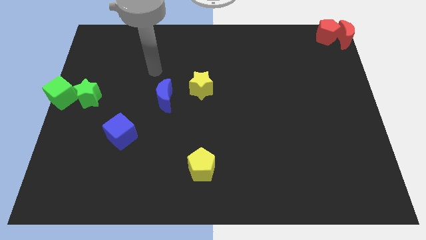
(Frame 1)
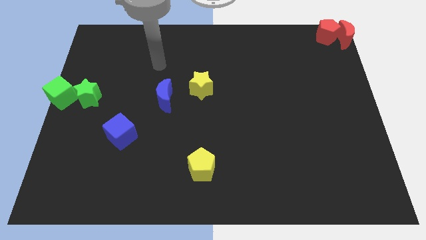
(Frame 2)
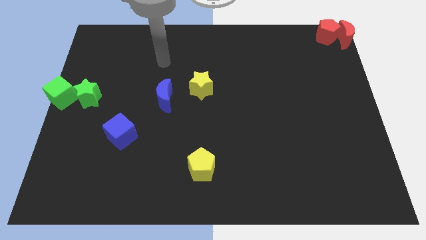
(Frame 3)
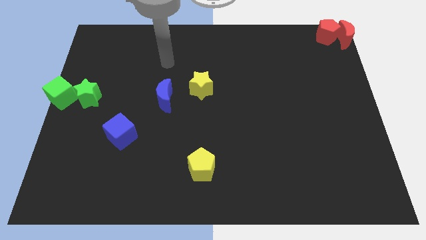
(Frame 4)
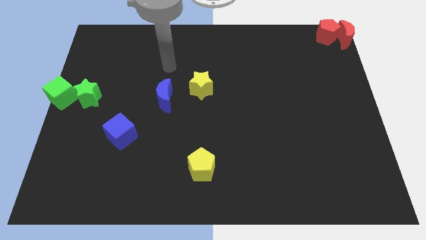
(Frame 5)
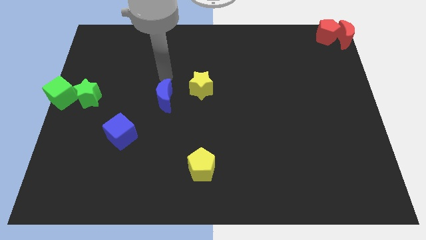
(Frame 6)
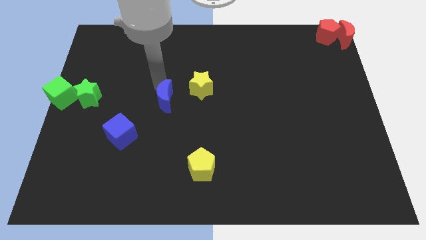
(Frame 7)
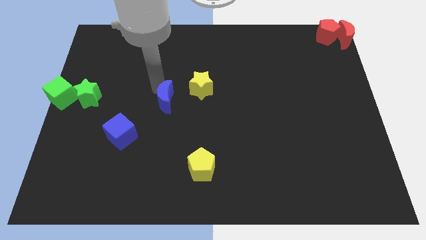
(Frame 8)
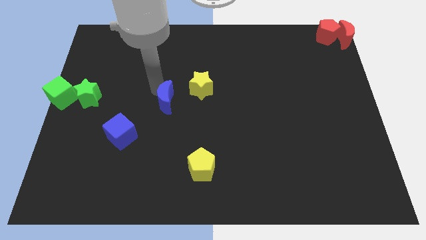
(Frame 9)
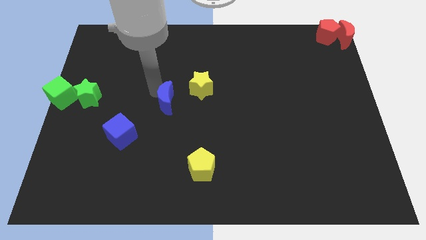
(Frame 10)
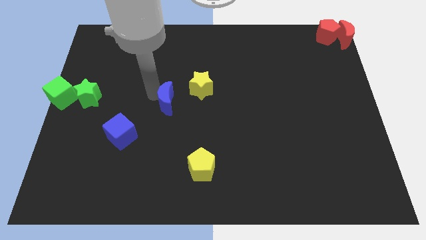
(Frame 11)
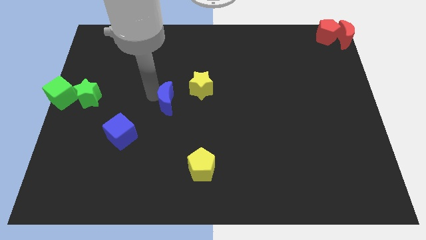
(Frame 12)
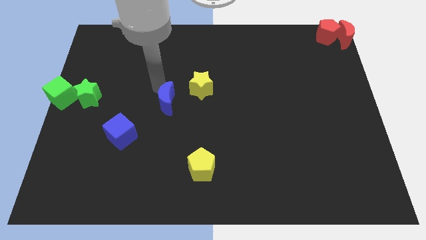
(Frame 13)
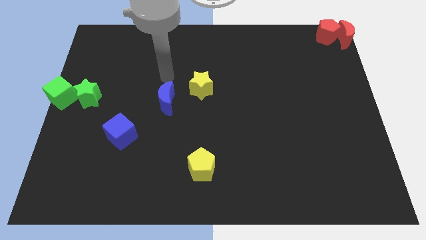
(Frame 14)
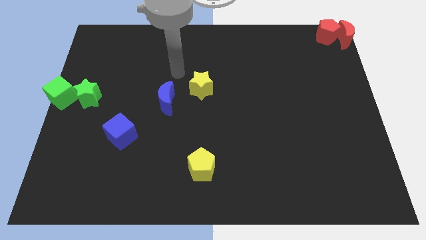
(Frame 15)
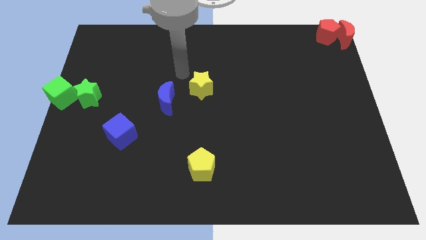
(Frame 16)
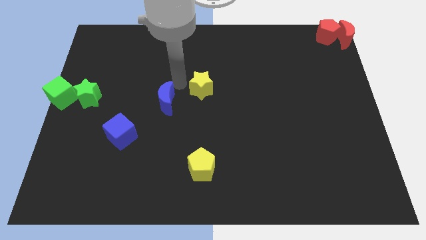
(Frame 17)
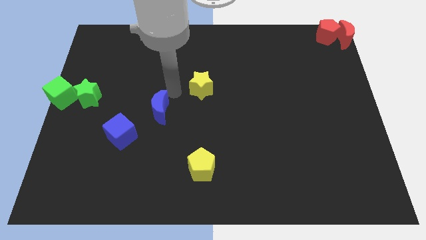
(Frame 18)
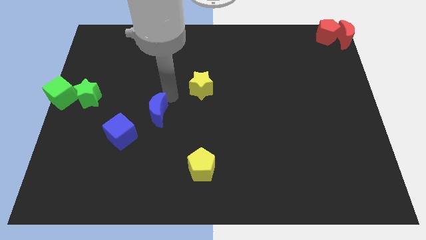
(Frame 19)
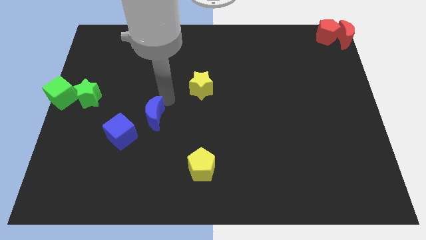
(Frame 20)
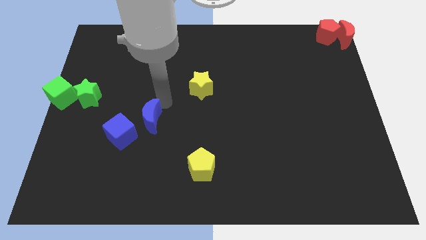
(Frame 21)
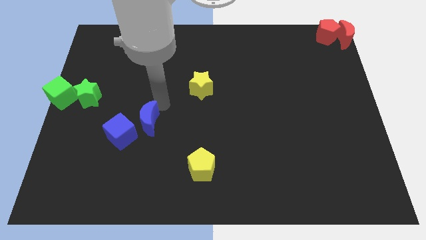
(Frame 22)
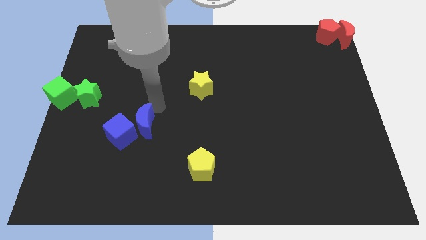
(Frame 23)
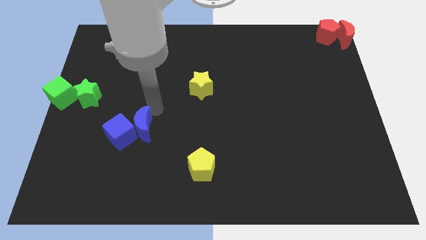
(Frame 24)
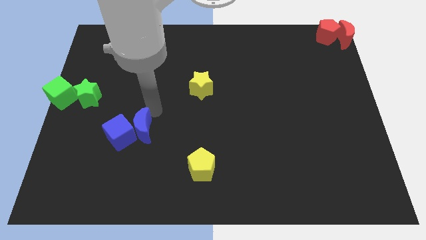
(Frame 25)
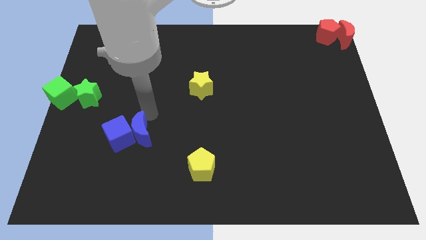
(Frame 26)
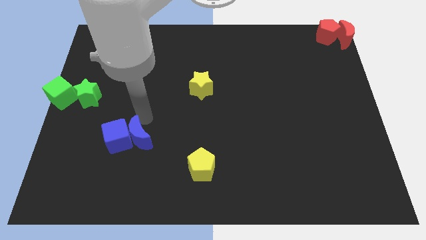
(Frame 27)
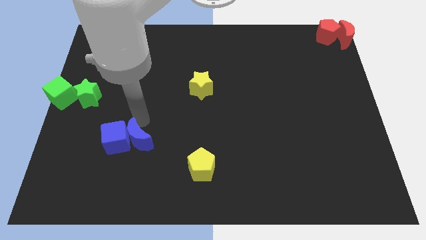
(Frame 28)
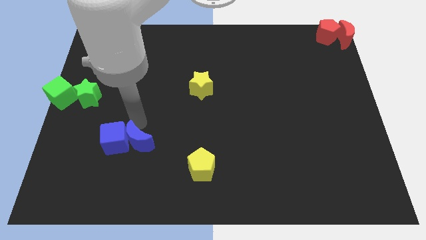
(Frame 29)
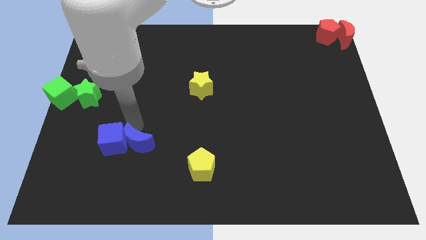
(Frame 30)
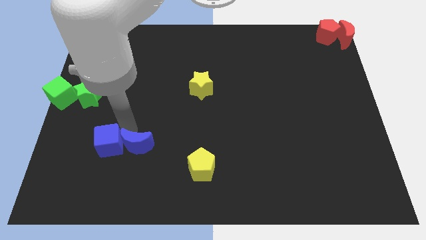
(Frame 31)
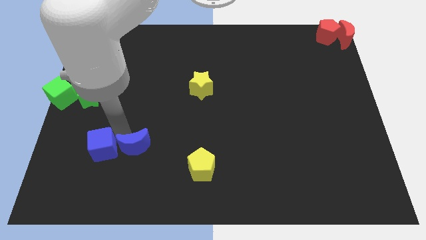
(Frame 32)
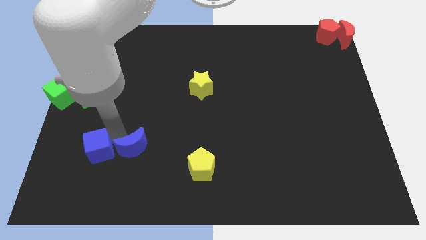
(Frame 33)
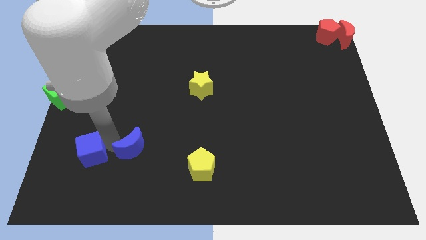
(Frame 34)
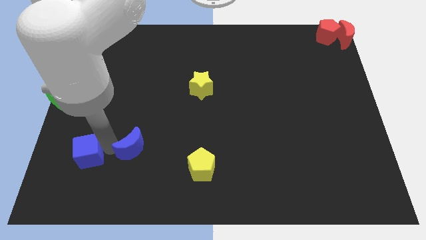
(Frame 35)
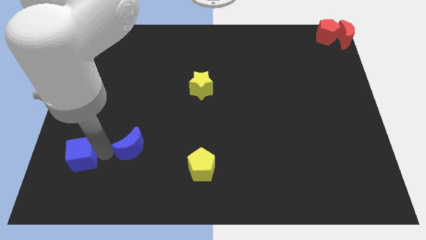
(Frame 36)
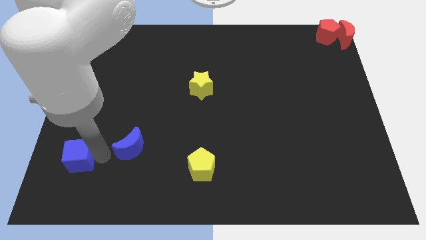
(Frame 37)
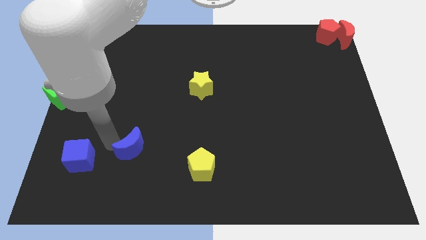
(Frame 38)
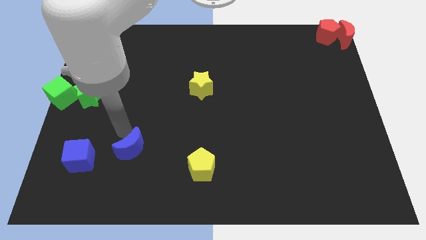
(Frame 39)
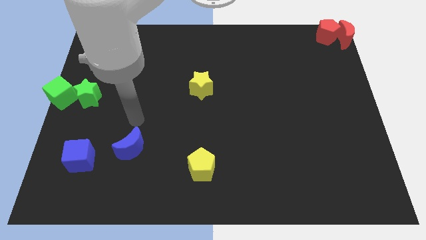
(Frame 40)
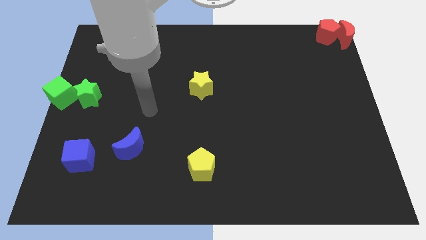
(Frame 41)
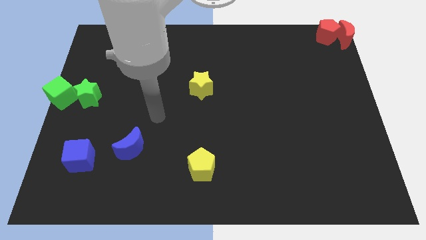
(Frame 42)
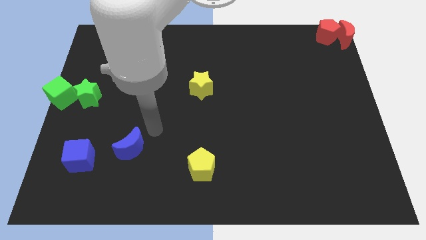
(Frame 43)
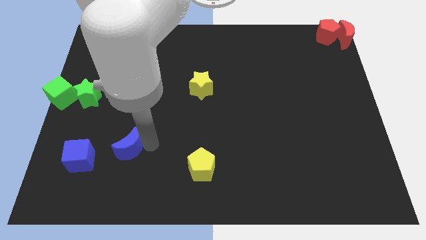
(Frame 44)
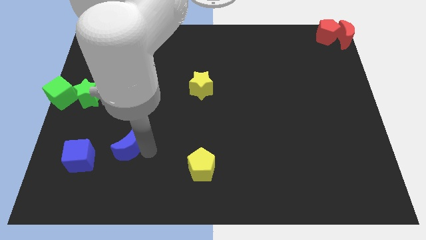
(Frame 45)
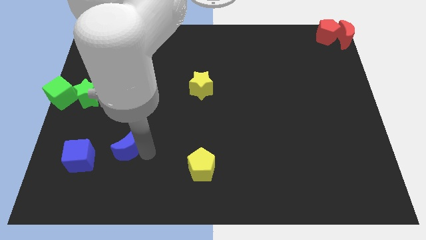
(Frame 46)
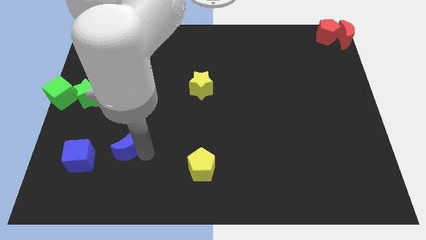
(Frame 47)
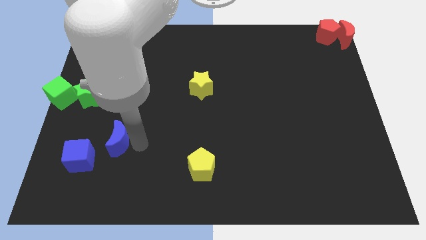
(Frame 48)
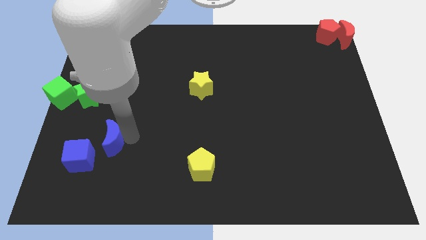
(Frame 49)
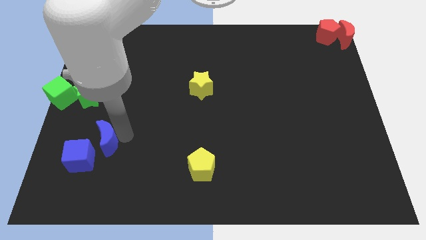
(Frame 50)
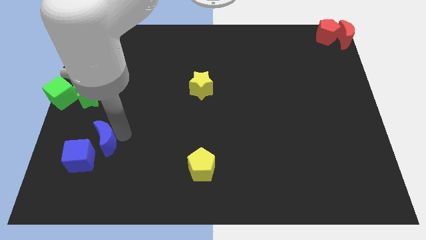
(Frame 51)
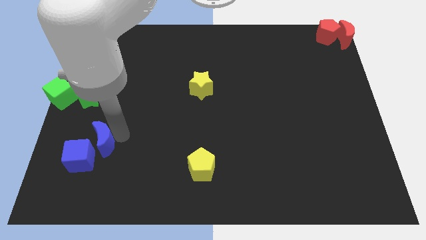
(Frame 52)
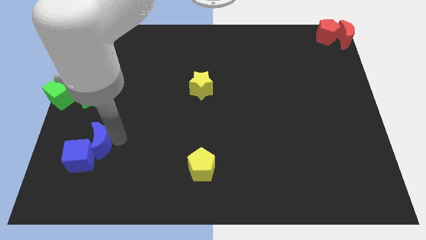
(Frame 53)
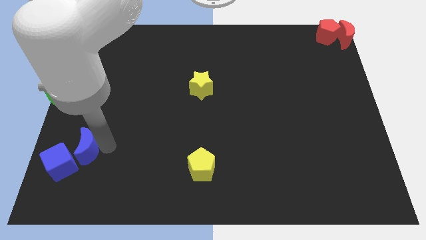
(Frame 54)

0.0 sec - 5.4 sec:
push the blue crescent into the blue cube

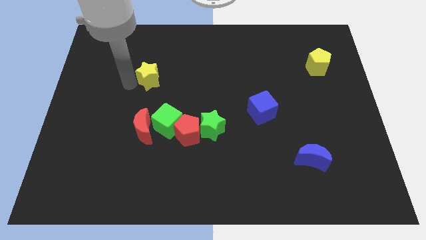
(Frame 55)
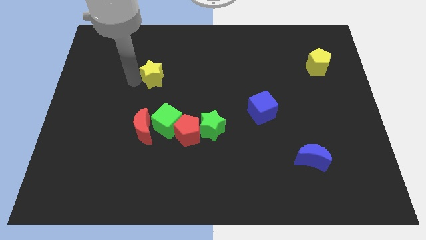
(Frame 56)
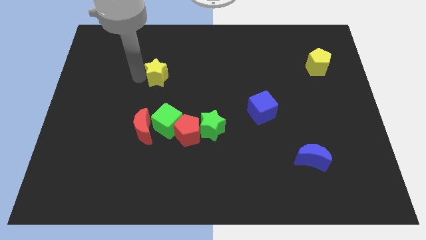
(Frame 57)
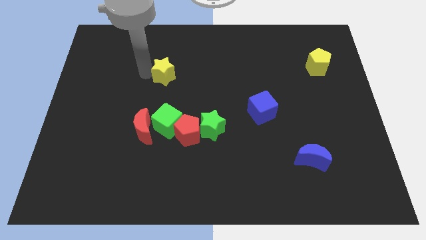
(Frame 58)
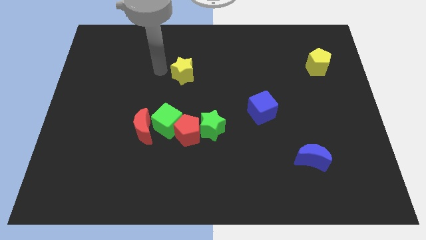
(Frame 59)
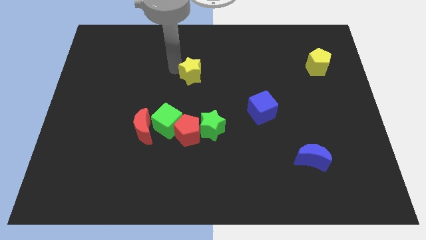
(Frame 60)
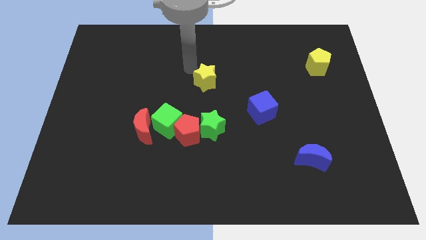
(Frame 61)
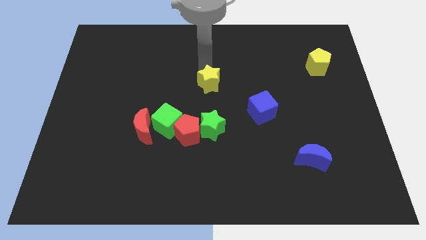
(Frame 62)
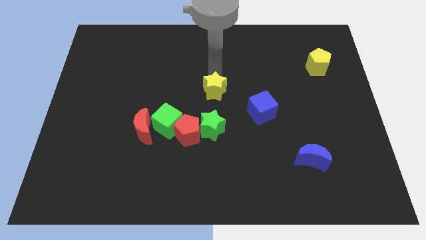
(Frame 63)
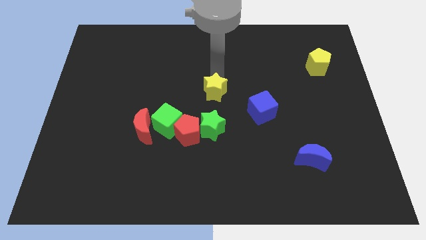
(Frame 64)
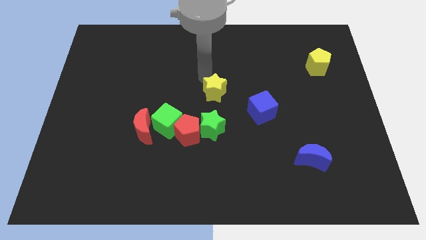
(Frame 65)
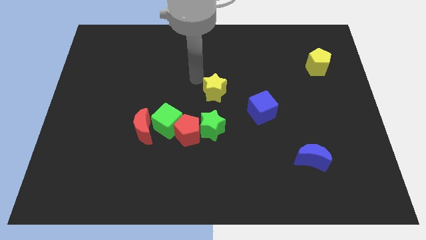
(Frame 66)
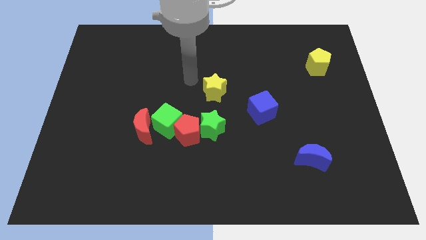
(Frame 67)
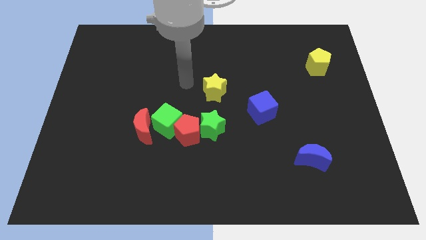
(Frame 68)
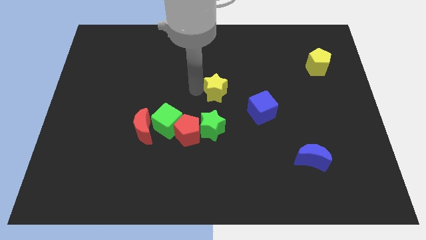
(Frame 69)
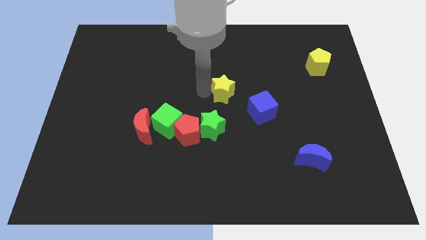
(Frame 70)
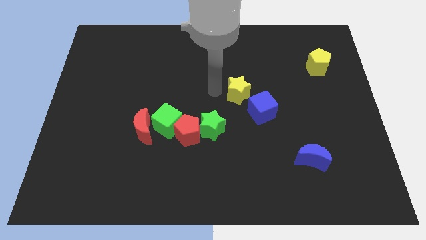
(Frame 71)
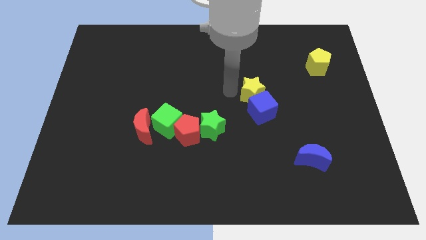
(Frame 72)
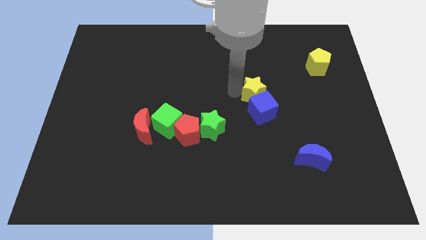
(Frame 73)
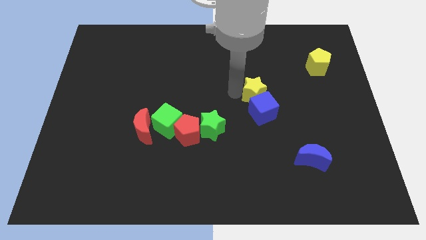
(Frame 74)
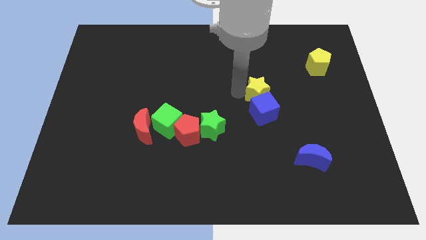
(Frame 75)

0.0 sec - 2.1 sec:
slide the yellow star to the top of the blue cube

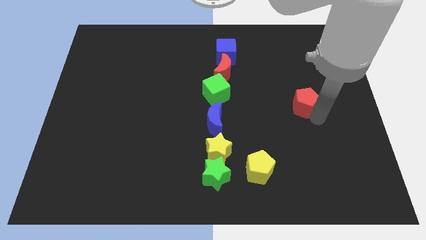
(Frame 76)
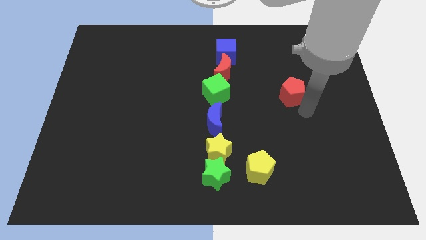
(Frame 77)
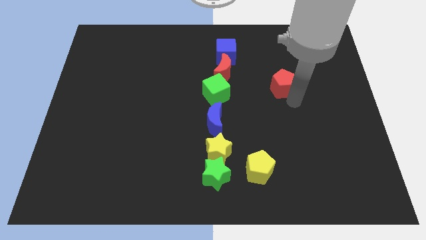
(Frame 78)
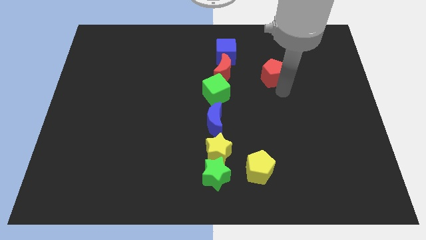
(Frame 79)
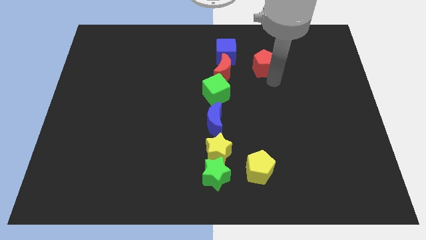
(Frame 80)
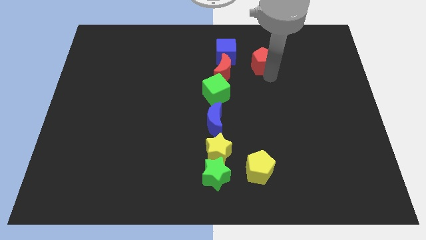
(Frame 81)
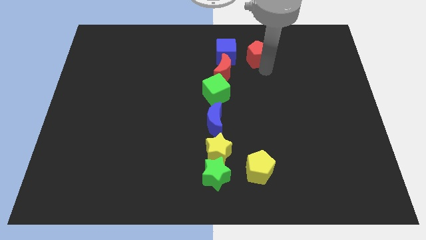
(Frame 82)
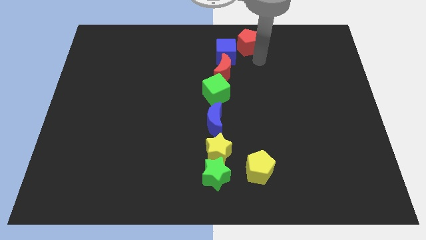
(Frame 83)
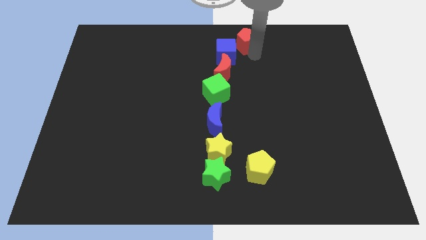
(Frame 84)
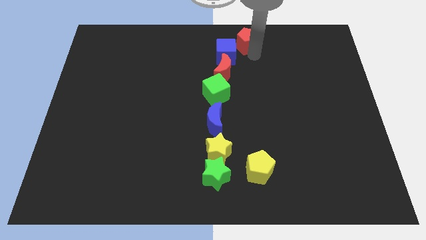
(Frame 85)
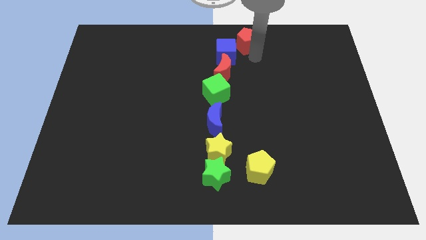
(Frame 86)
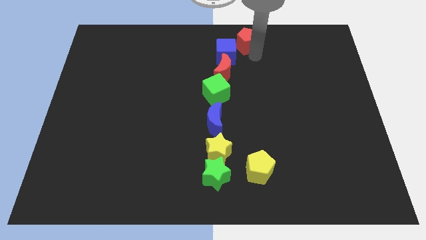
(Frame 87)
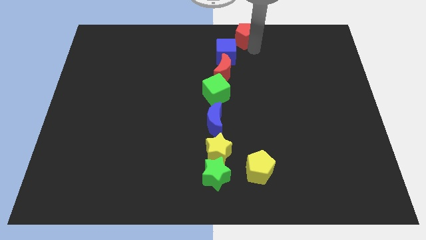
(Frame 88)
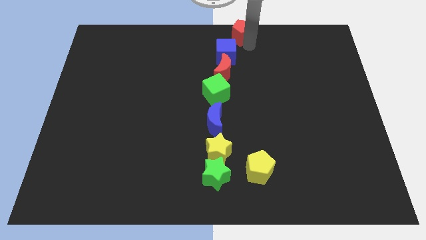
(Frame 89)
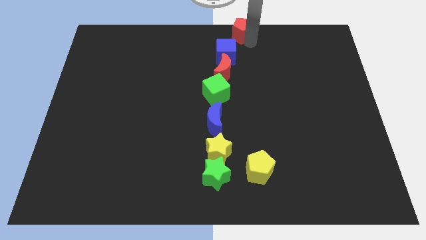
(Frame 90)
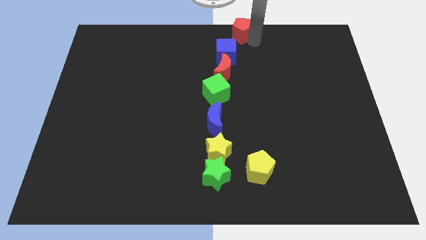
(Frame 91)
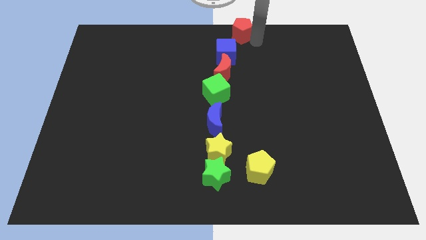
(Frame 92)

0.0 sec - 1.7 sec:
push the red pentagon to the top center of the board
